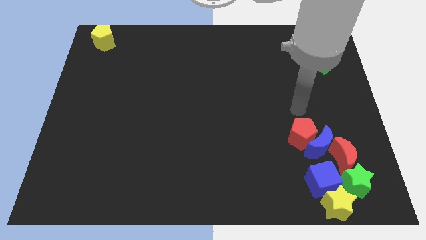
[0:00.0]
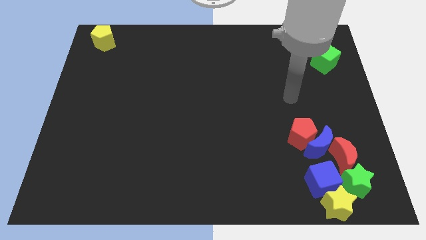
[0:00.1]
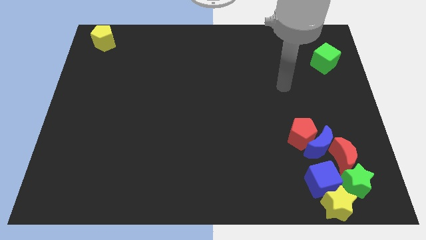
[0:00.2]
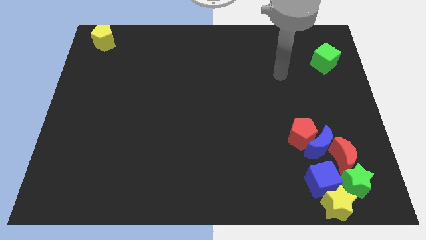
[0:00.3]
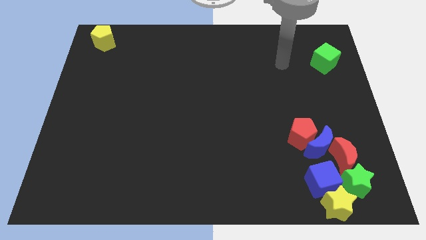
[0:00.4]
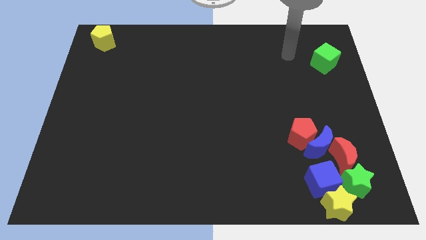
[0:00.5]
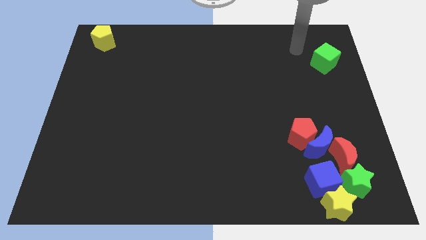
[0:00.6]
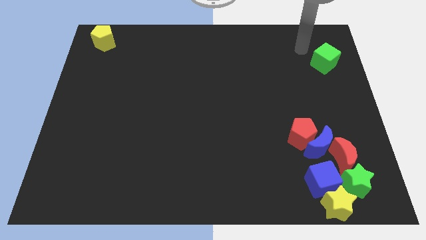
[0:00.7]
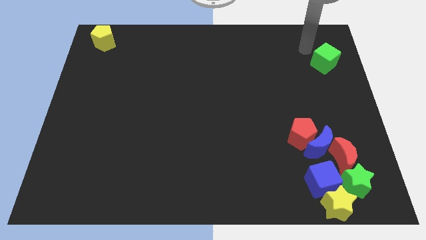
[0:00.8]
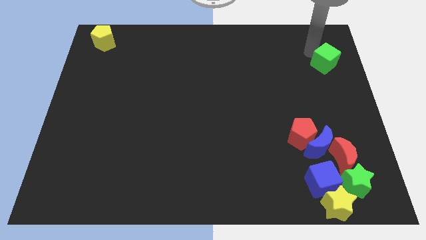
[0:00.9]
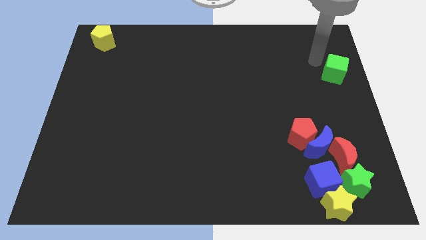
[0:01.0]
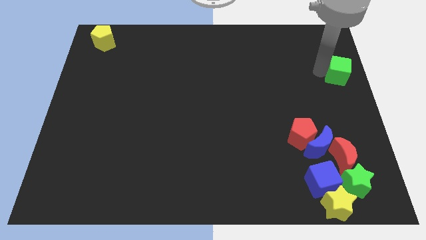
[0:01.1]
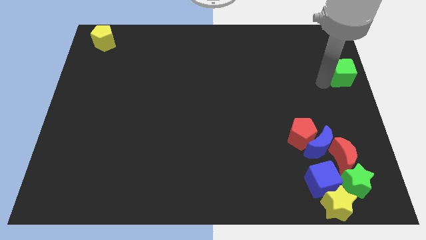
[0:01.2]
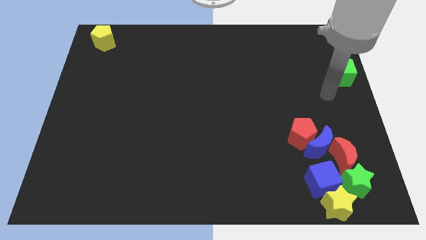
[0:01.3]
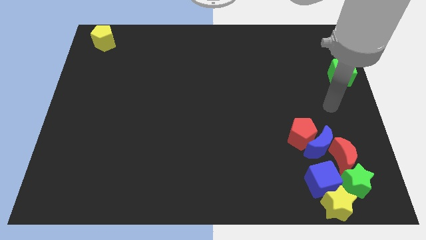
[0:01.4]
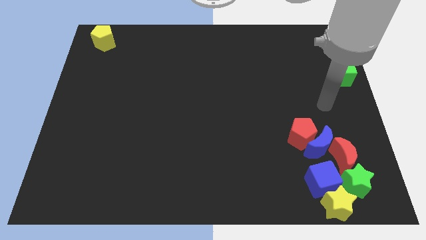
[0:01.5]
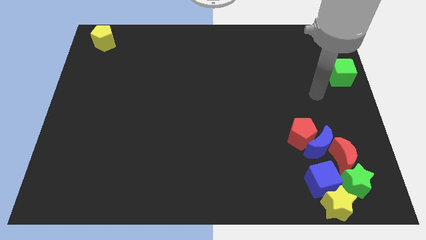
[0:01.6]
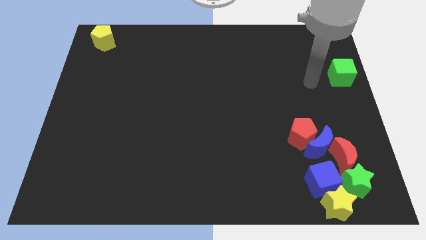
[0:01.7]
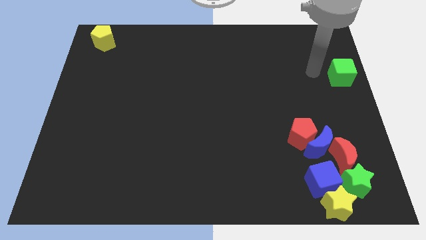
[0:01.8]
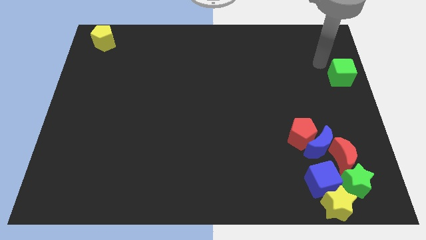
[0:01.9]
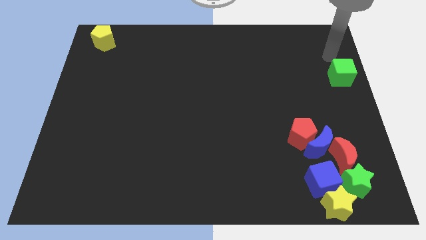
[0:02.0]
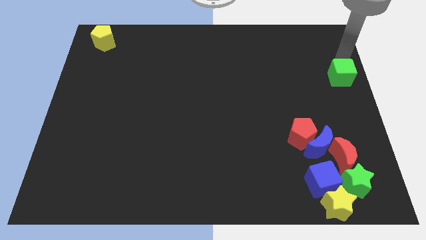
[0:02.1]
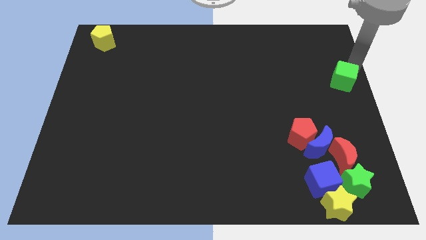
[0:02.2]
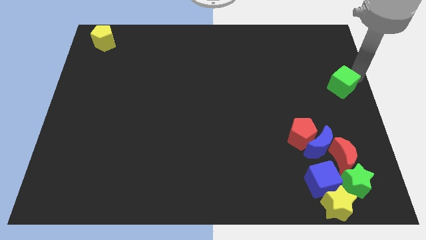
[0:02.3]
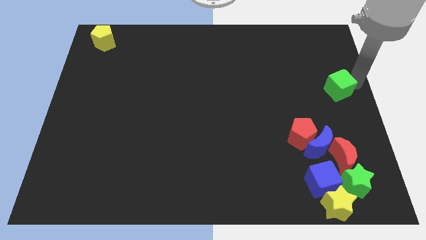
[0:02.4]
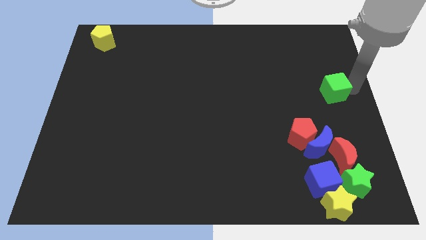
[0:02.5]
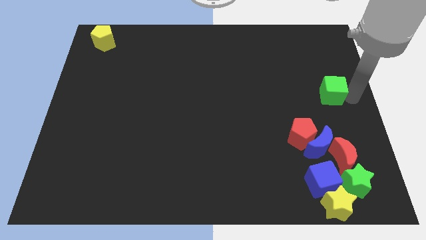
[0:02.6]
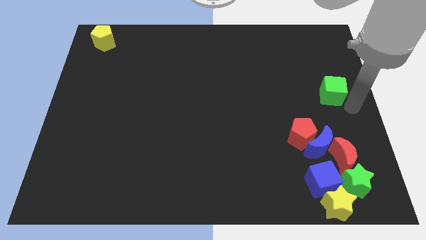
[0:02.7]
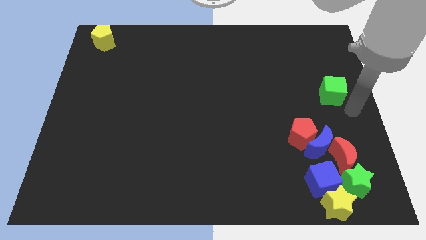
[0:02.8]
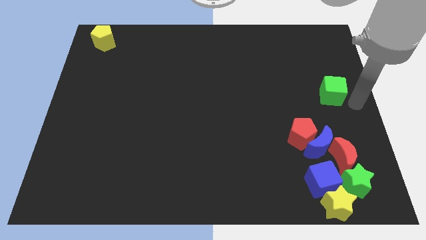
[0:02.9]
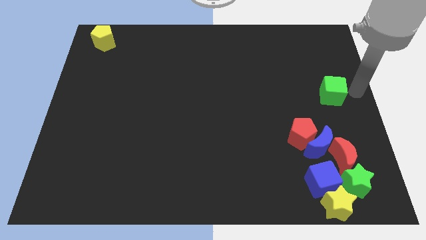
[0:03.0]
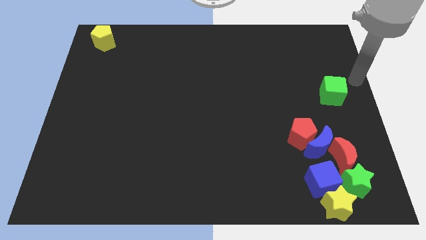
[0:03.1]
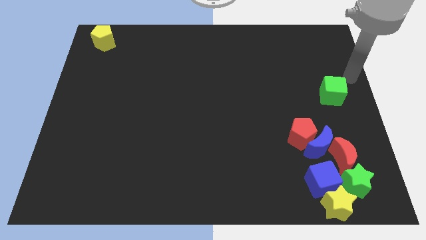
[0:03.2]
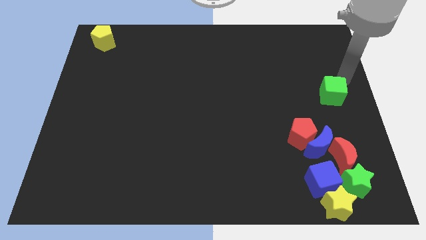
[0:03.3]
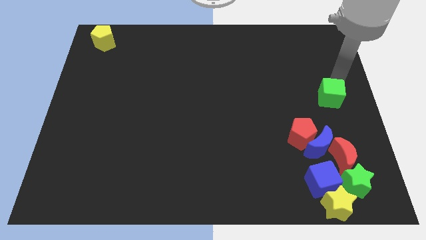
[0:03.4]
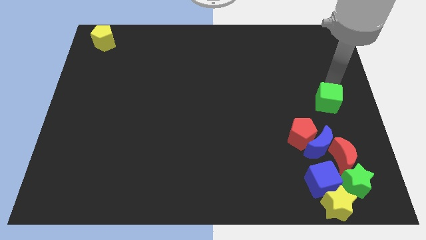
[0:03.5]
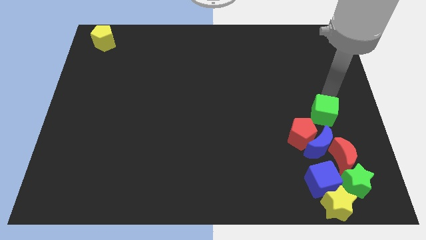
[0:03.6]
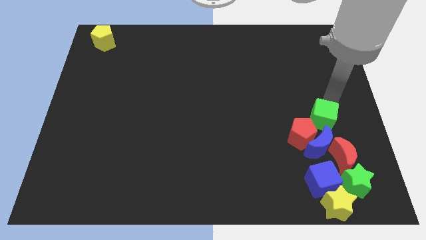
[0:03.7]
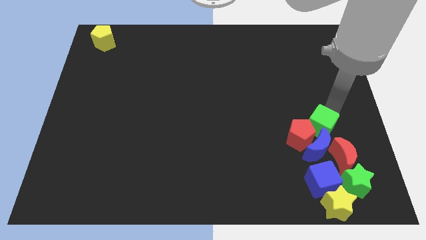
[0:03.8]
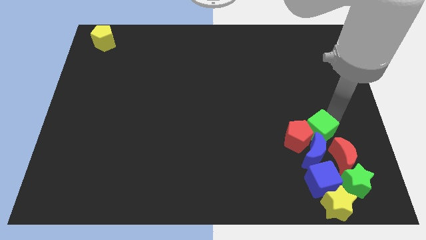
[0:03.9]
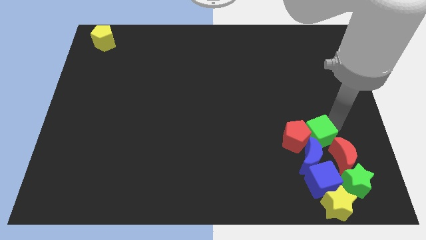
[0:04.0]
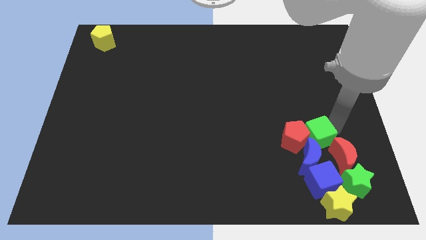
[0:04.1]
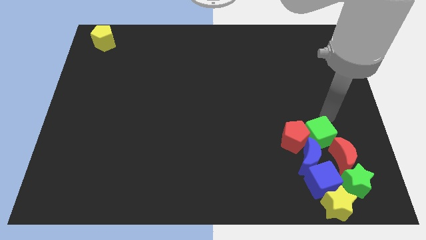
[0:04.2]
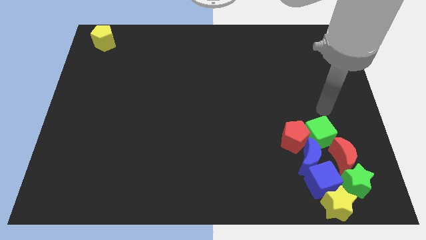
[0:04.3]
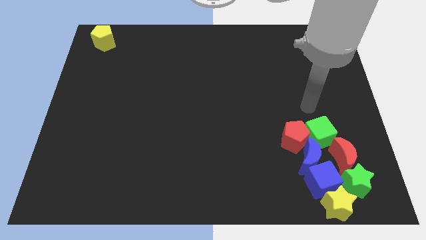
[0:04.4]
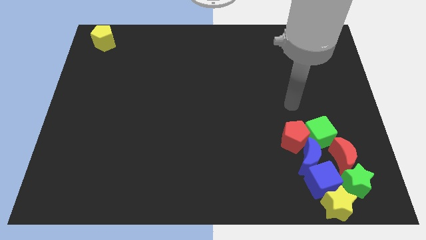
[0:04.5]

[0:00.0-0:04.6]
push the green cube into the group of blocks

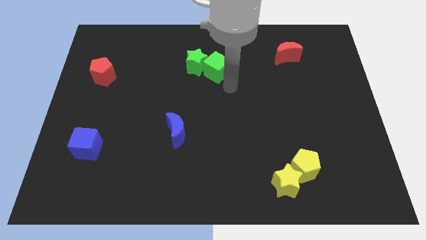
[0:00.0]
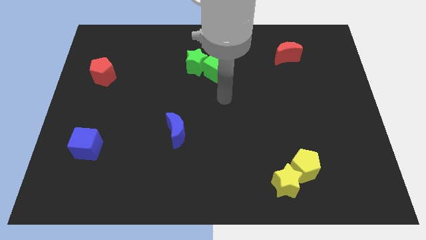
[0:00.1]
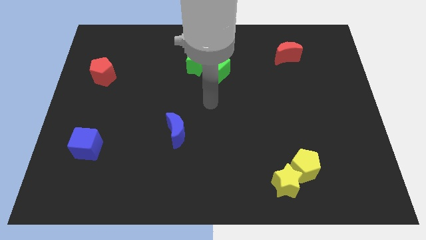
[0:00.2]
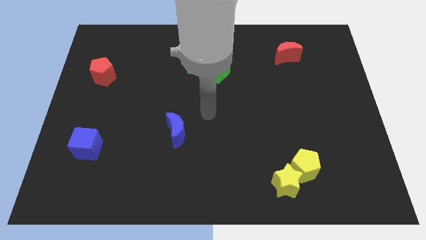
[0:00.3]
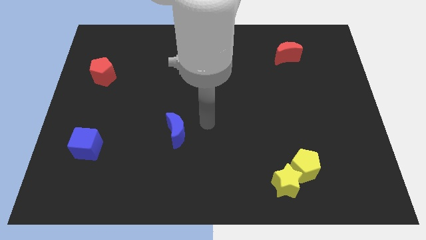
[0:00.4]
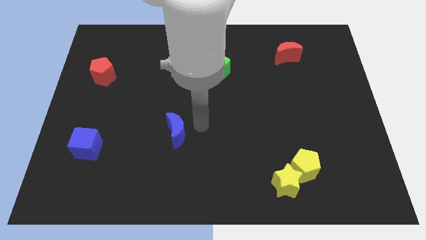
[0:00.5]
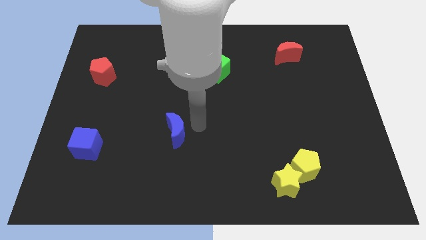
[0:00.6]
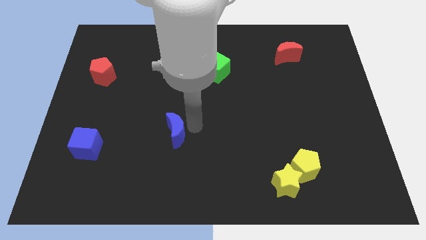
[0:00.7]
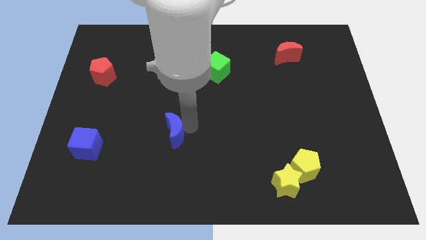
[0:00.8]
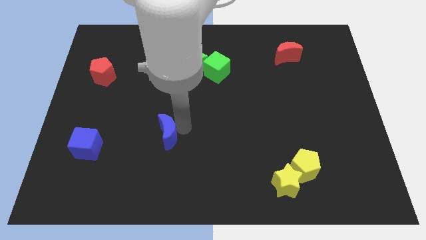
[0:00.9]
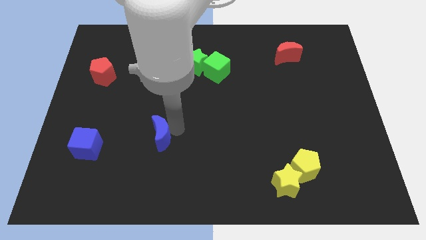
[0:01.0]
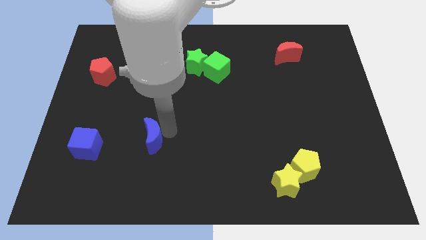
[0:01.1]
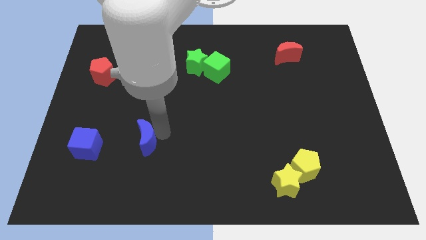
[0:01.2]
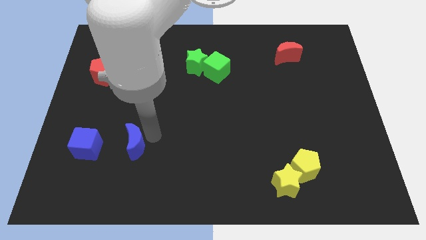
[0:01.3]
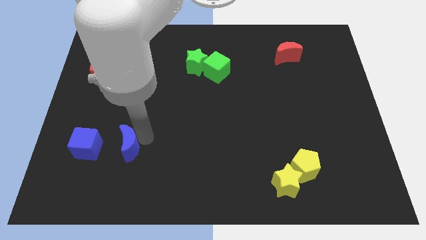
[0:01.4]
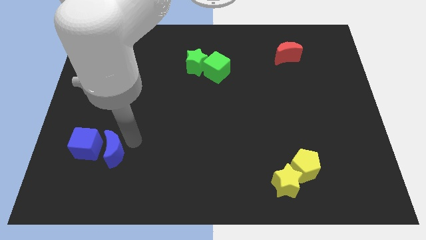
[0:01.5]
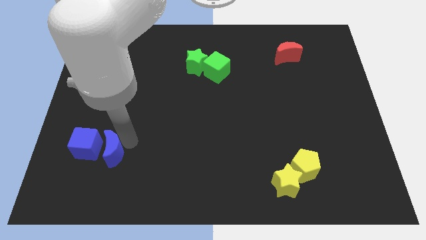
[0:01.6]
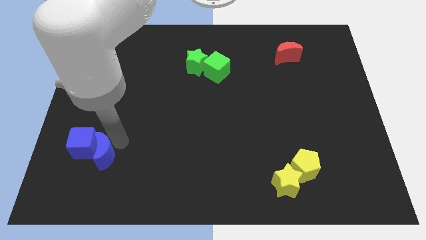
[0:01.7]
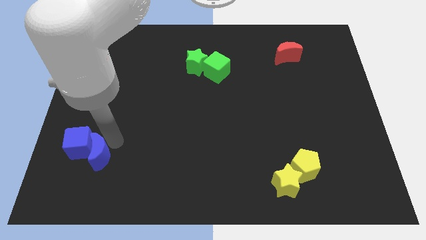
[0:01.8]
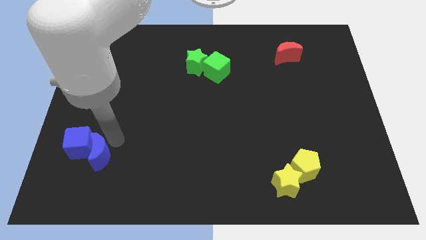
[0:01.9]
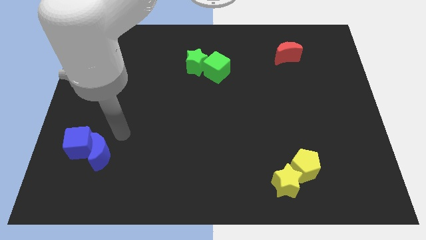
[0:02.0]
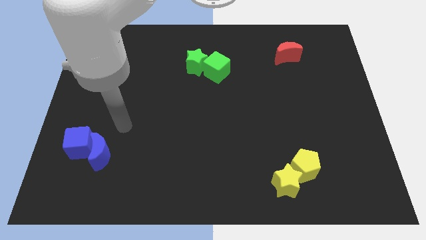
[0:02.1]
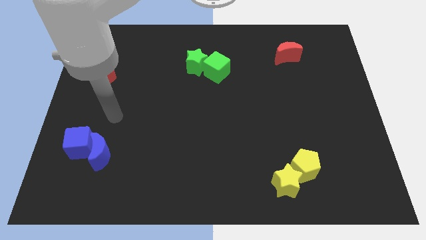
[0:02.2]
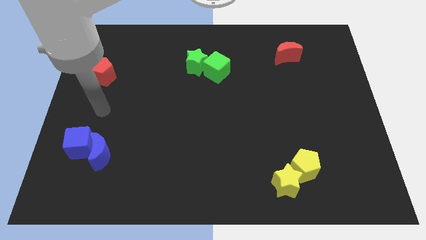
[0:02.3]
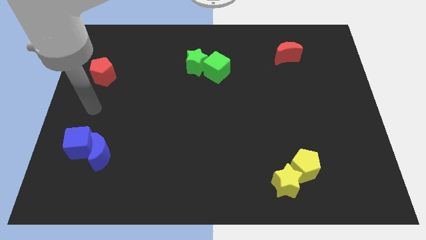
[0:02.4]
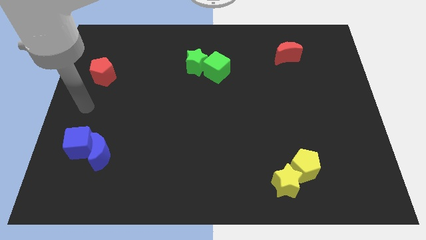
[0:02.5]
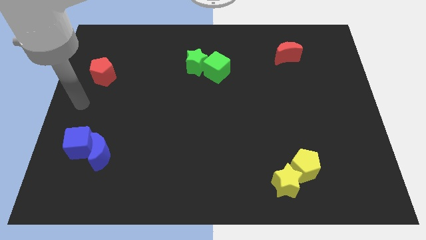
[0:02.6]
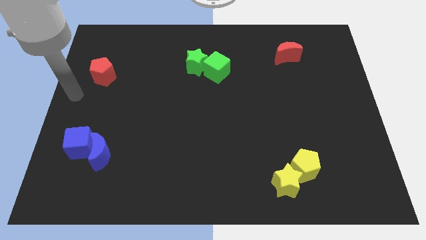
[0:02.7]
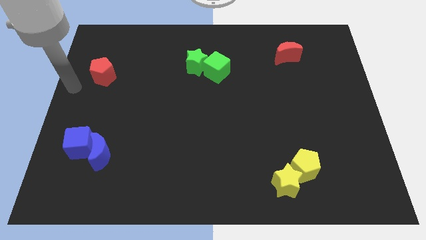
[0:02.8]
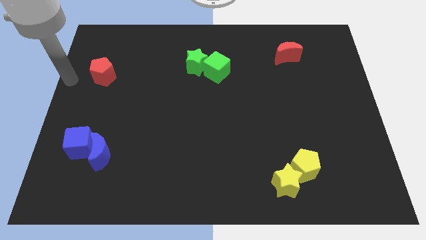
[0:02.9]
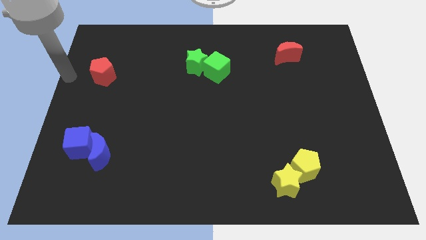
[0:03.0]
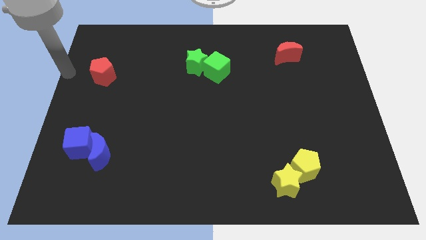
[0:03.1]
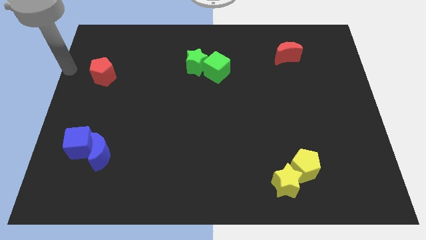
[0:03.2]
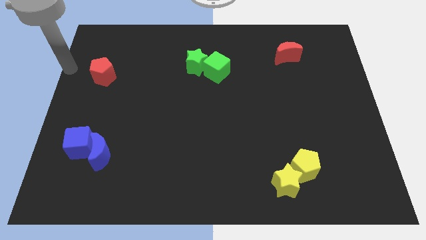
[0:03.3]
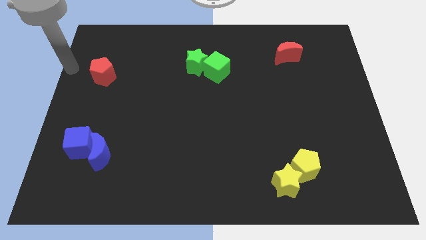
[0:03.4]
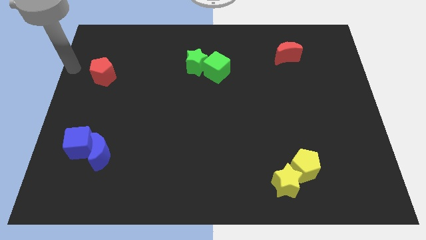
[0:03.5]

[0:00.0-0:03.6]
slide the blue crescent into the right side of the blue cube

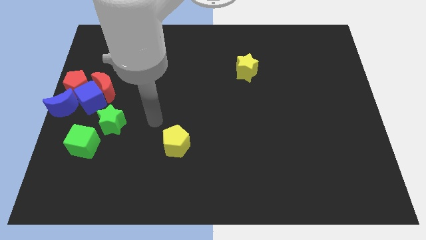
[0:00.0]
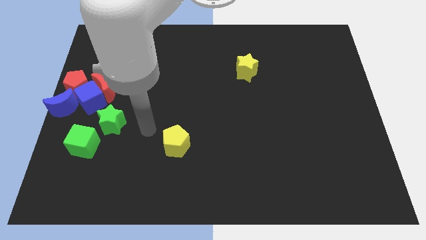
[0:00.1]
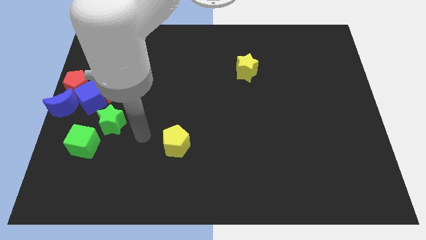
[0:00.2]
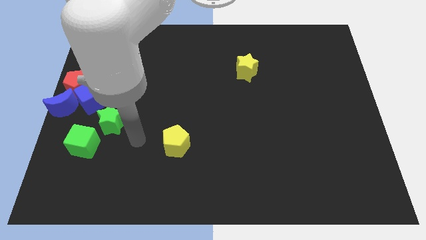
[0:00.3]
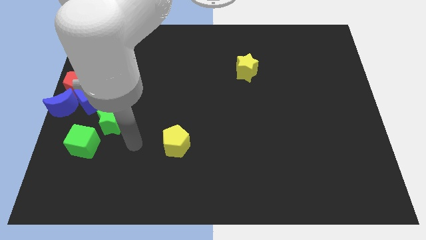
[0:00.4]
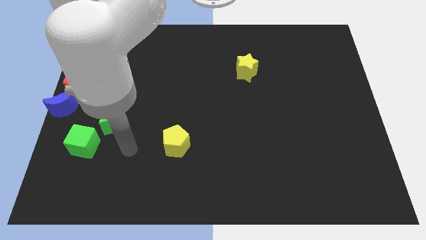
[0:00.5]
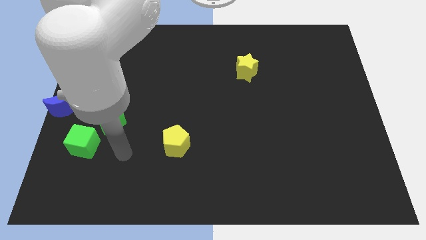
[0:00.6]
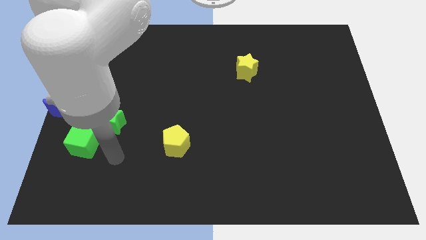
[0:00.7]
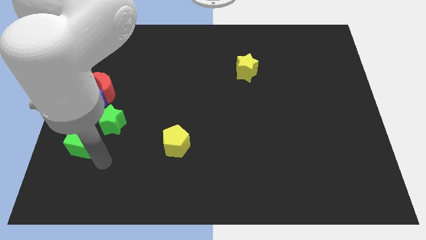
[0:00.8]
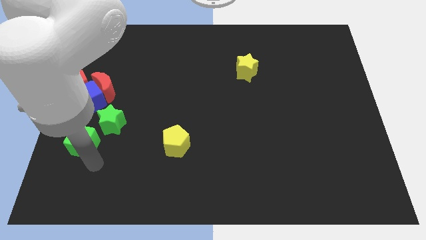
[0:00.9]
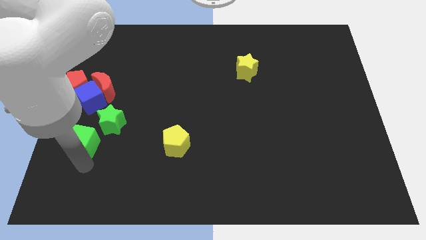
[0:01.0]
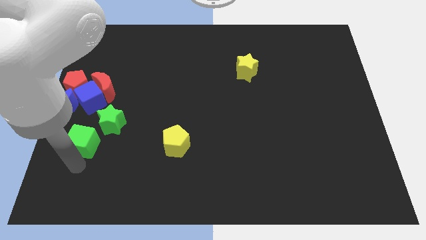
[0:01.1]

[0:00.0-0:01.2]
move your arm to the bottom of the green cube
